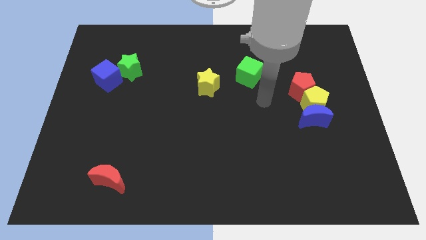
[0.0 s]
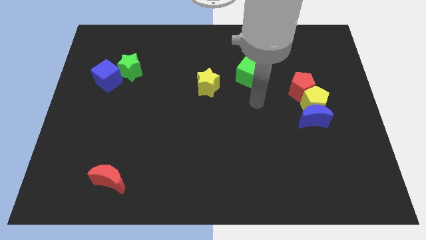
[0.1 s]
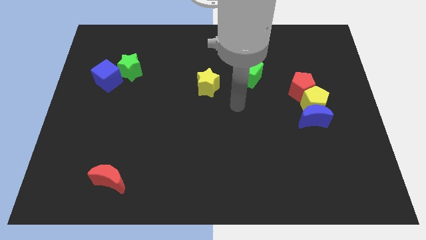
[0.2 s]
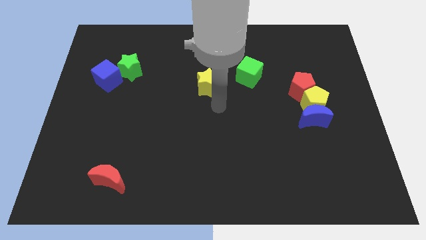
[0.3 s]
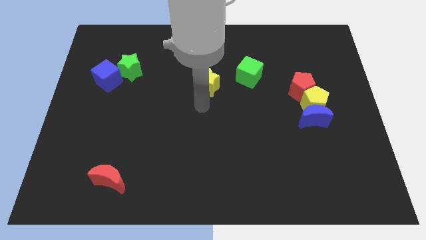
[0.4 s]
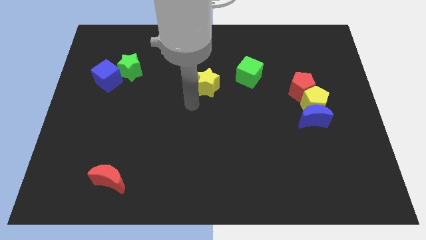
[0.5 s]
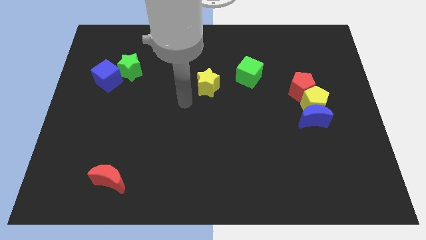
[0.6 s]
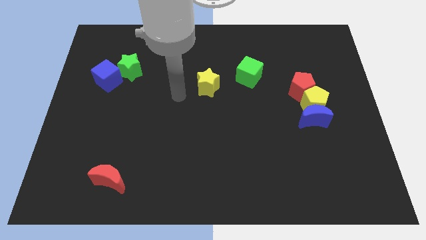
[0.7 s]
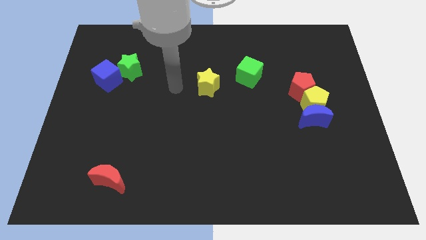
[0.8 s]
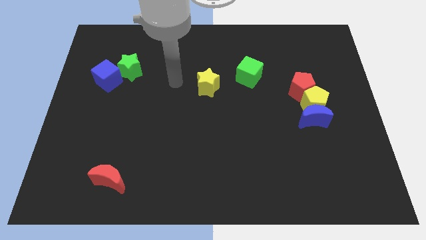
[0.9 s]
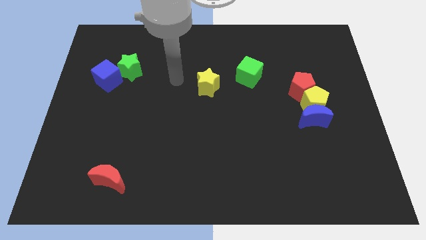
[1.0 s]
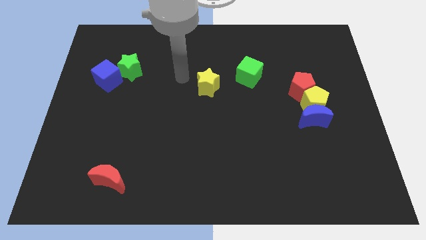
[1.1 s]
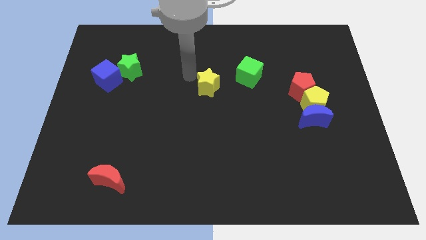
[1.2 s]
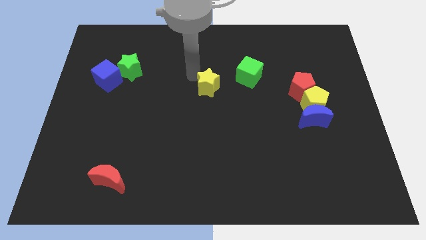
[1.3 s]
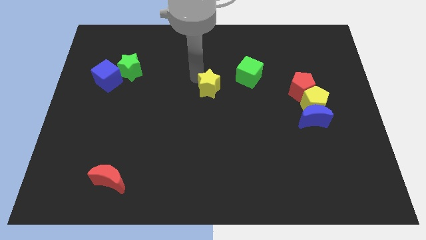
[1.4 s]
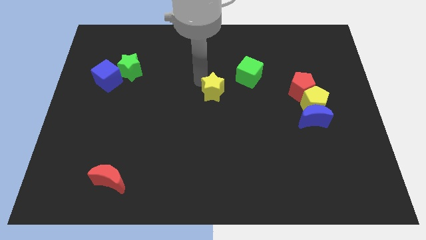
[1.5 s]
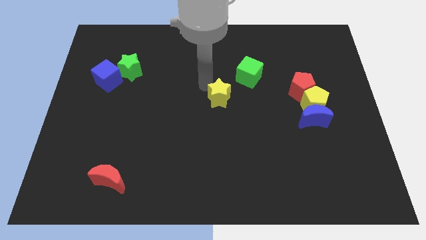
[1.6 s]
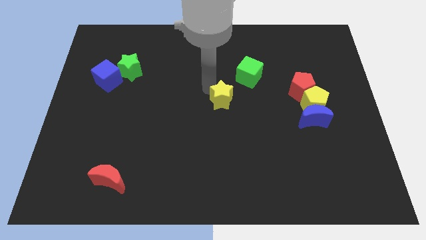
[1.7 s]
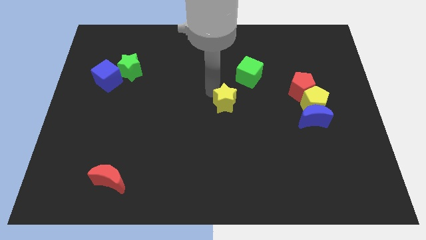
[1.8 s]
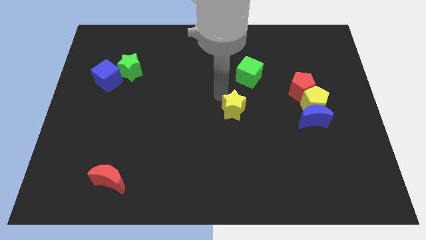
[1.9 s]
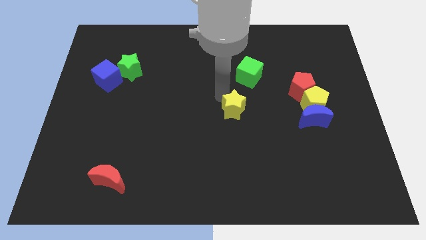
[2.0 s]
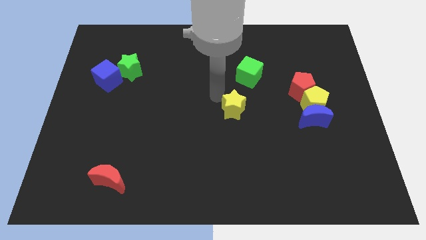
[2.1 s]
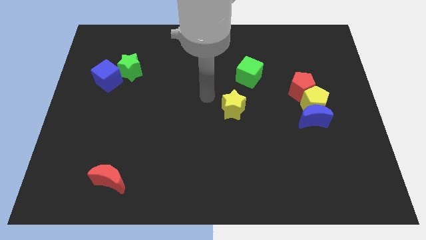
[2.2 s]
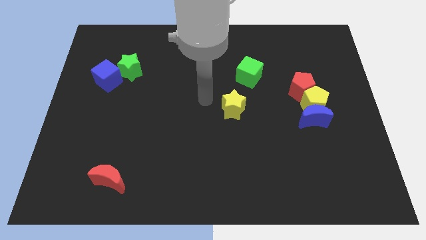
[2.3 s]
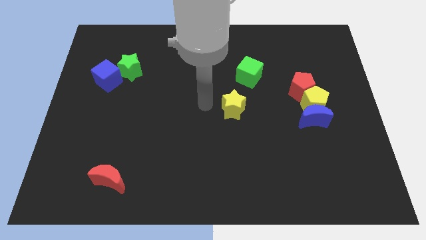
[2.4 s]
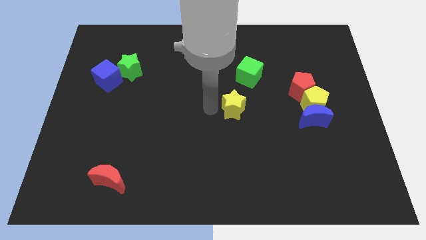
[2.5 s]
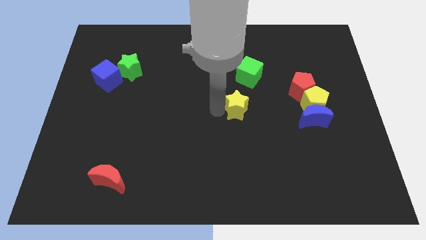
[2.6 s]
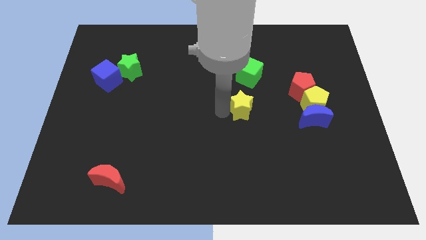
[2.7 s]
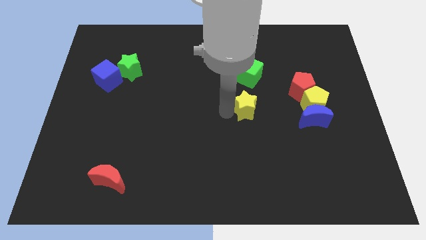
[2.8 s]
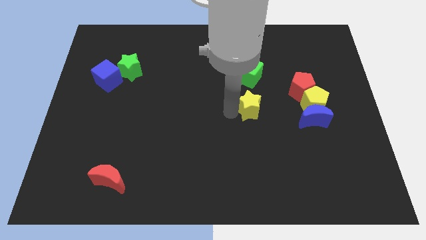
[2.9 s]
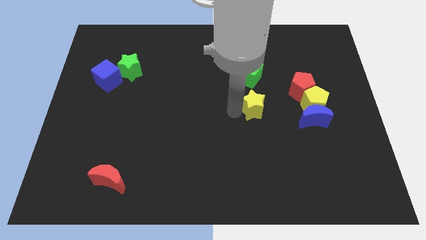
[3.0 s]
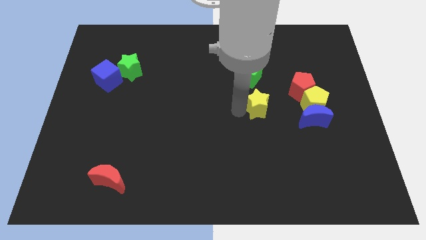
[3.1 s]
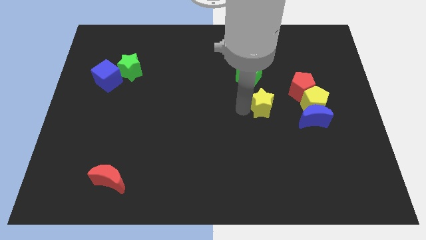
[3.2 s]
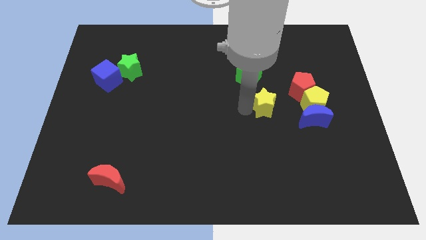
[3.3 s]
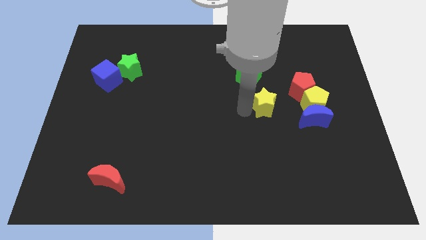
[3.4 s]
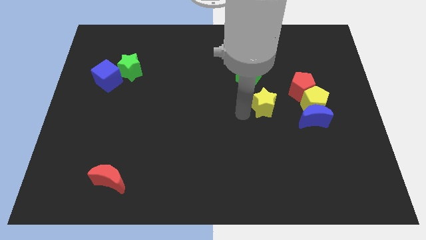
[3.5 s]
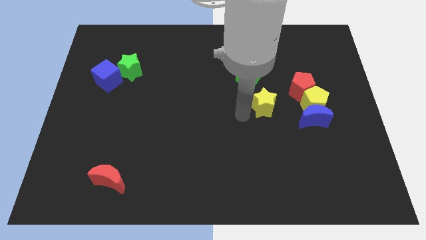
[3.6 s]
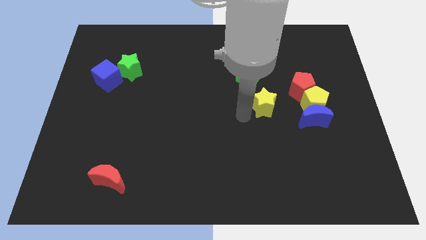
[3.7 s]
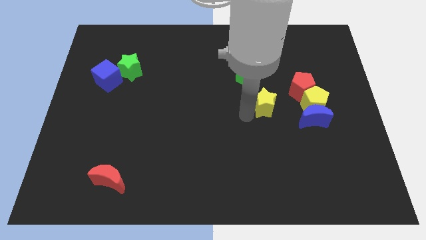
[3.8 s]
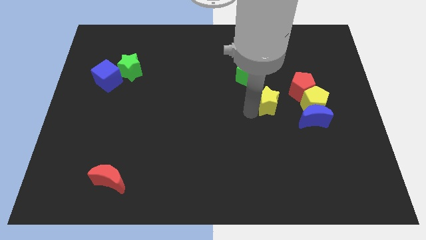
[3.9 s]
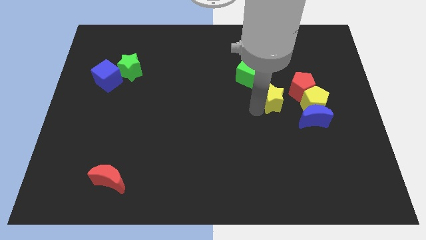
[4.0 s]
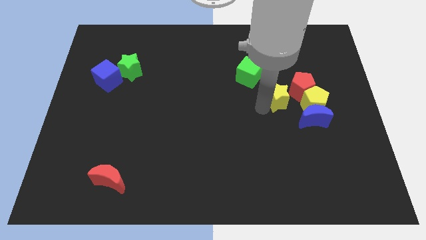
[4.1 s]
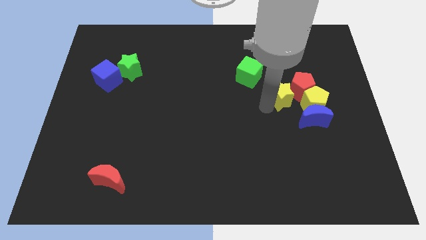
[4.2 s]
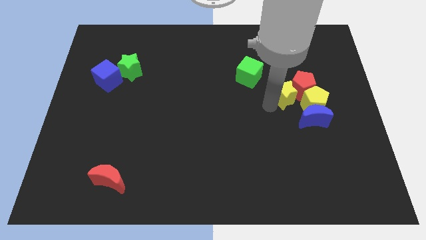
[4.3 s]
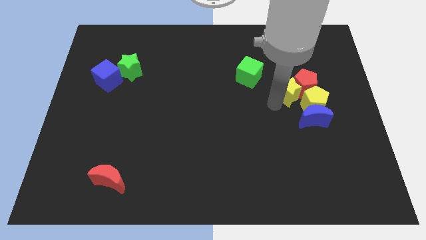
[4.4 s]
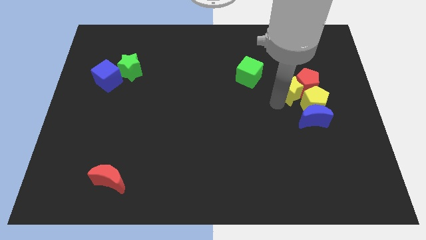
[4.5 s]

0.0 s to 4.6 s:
push the yellow star close to the red pentagon

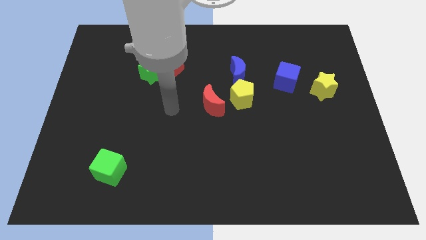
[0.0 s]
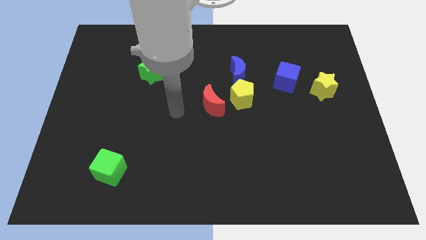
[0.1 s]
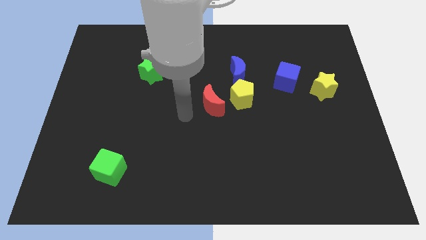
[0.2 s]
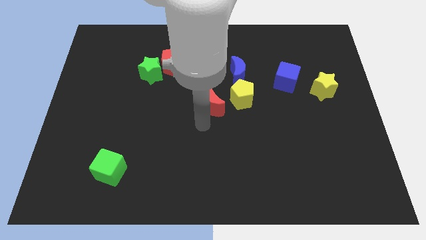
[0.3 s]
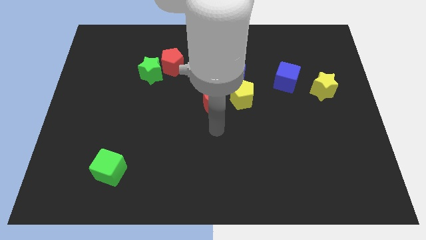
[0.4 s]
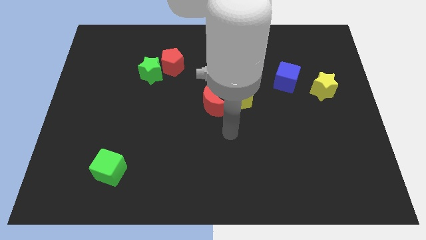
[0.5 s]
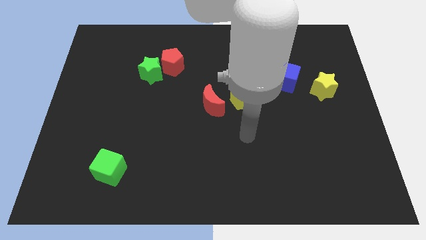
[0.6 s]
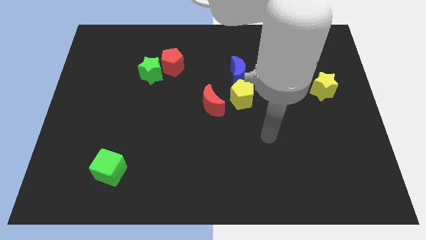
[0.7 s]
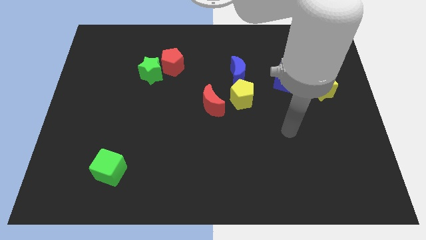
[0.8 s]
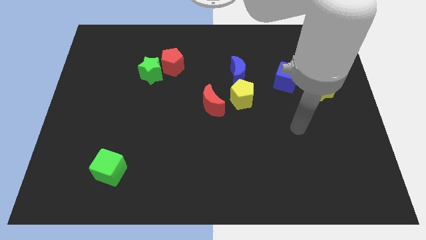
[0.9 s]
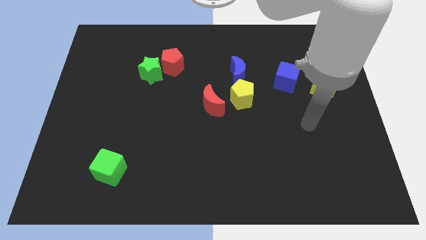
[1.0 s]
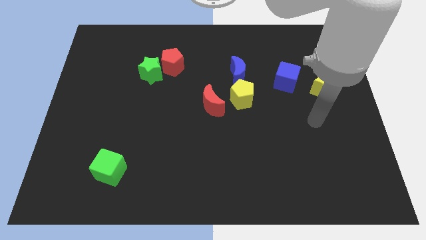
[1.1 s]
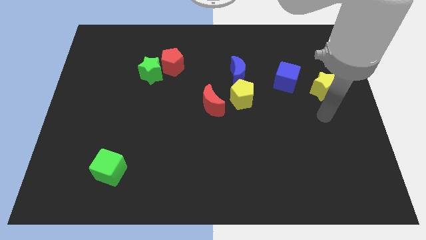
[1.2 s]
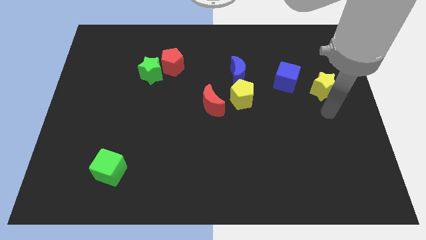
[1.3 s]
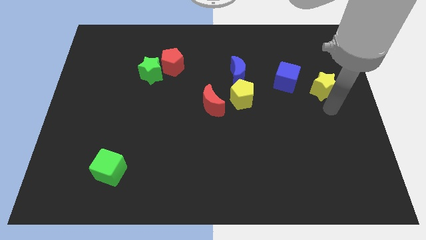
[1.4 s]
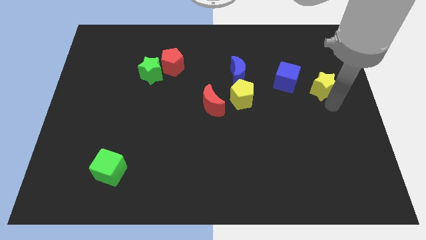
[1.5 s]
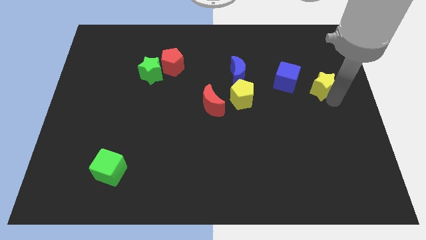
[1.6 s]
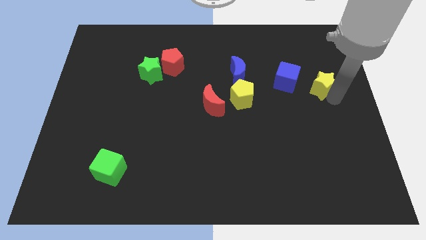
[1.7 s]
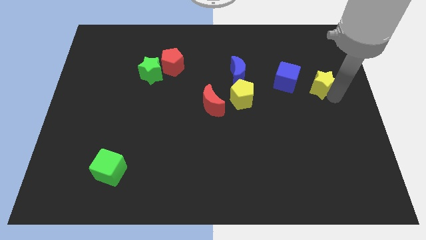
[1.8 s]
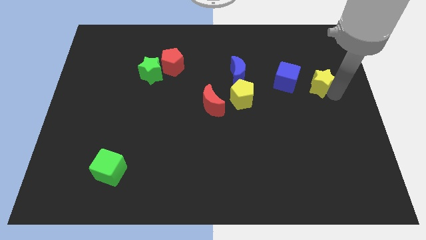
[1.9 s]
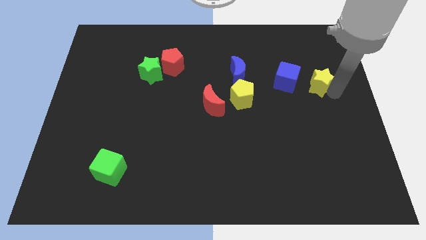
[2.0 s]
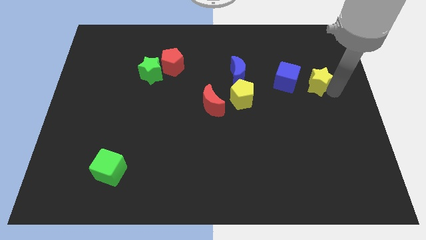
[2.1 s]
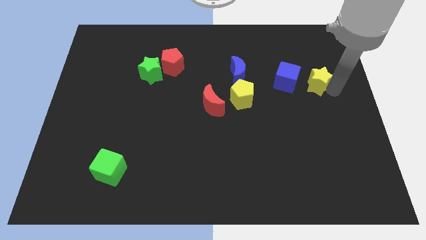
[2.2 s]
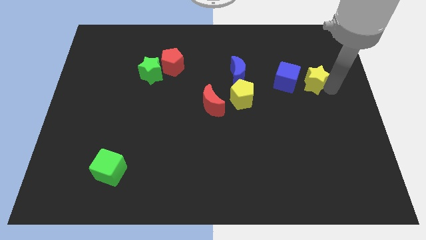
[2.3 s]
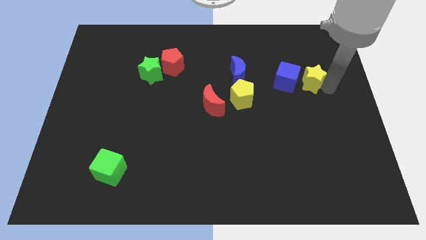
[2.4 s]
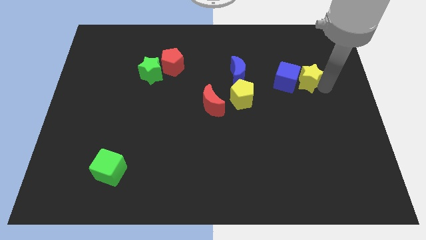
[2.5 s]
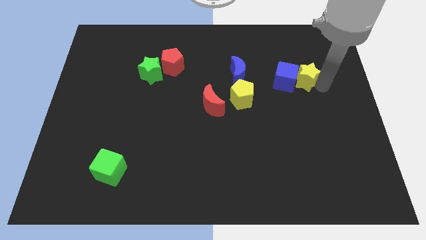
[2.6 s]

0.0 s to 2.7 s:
move the yellow star towards the blue cube

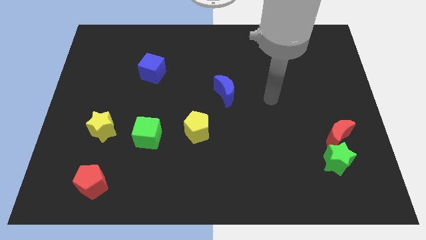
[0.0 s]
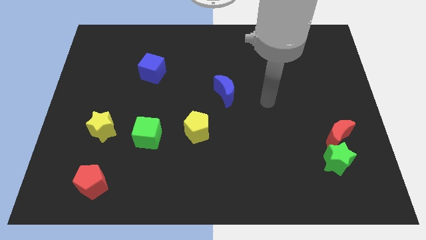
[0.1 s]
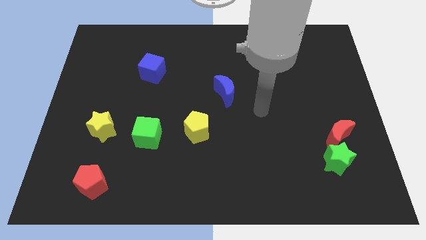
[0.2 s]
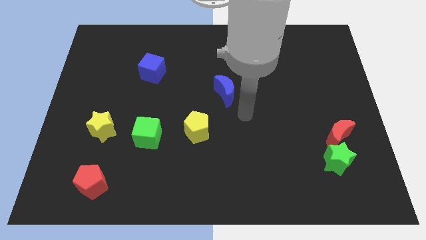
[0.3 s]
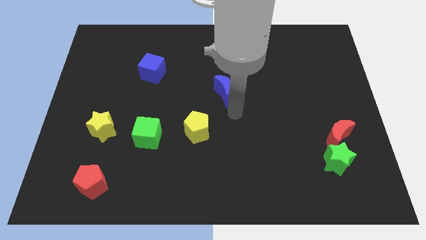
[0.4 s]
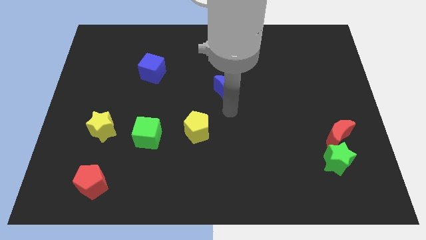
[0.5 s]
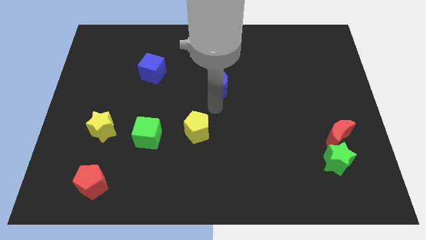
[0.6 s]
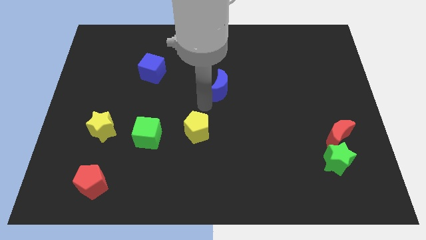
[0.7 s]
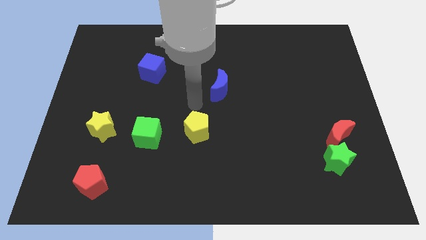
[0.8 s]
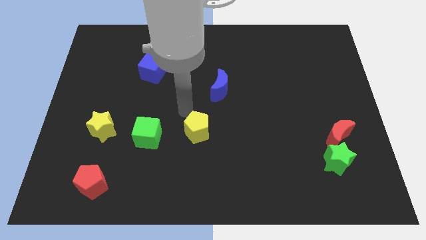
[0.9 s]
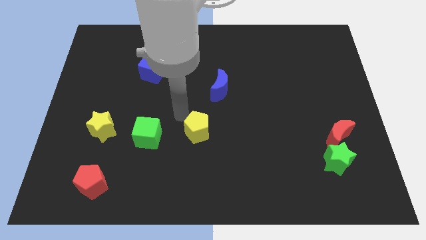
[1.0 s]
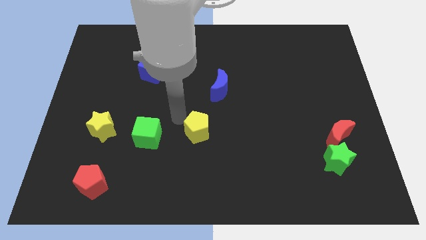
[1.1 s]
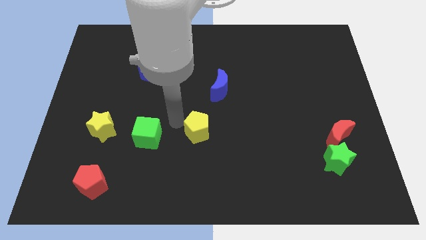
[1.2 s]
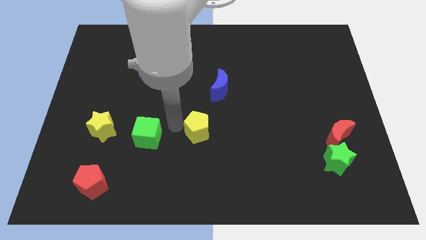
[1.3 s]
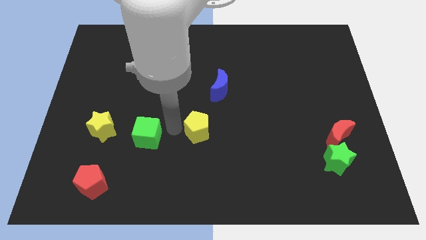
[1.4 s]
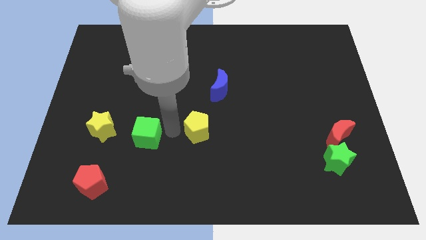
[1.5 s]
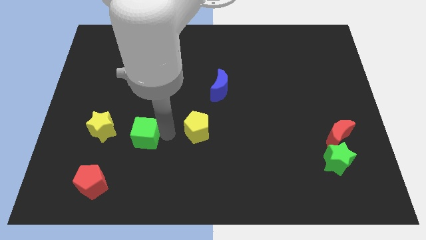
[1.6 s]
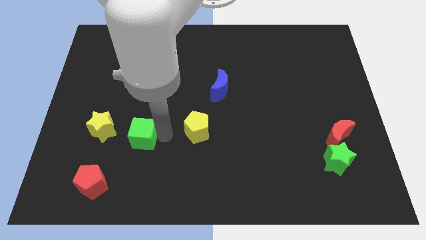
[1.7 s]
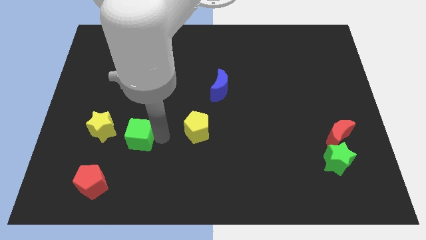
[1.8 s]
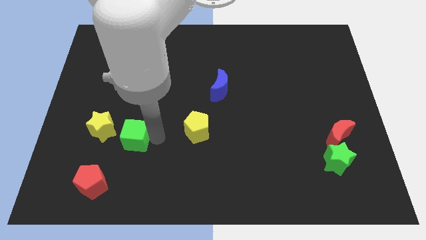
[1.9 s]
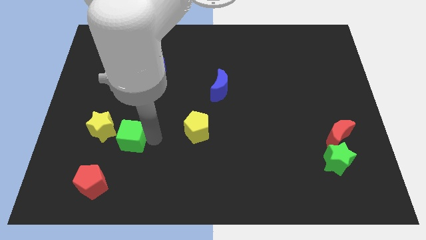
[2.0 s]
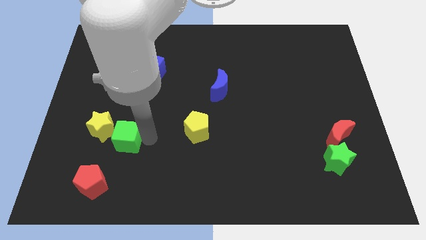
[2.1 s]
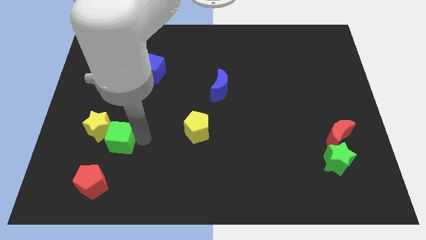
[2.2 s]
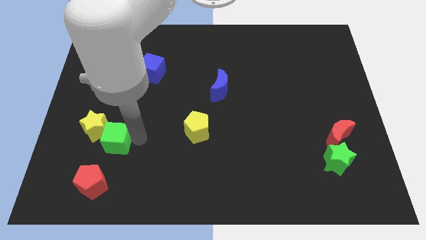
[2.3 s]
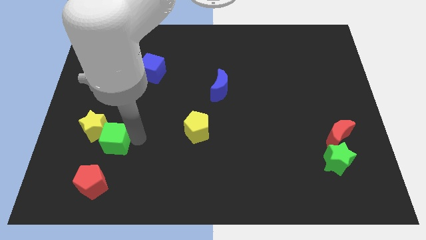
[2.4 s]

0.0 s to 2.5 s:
push the green cube close to the yellow star
